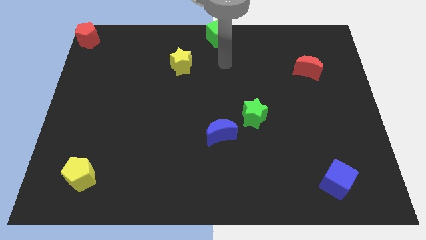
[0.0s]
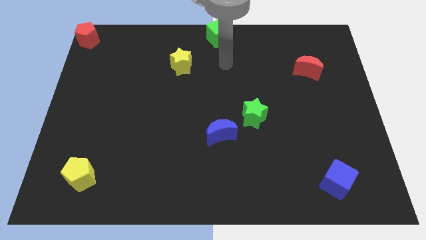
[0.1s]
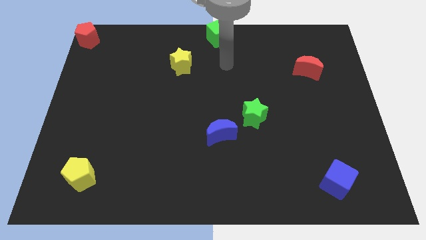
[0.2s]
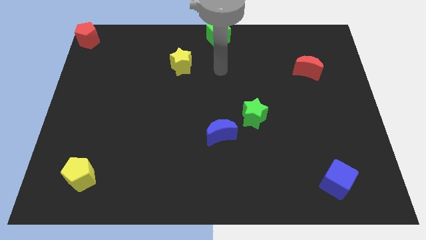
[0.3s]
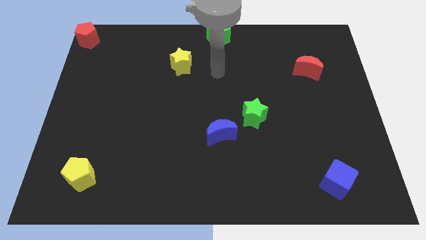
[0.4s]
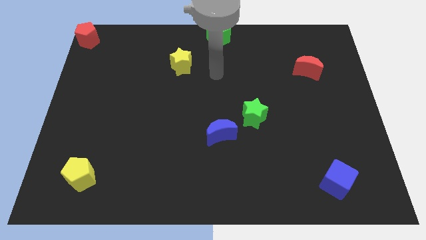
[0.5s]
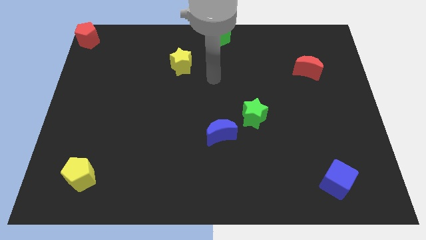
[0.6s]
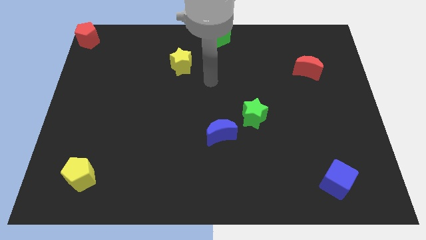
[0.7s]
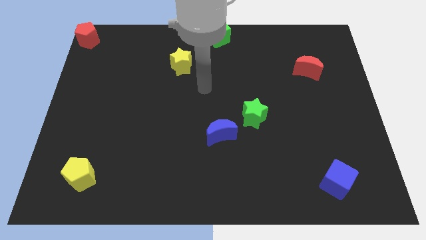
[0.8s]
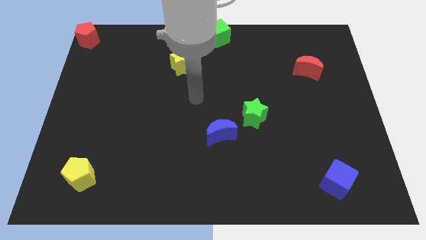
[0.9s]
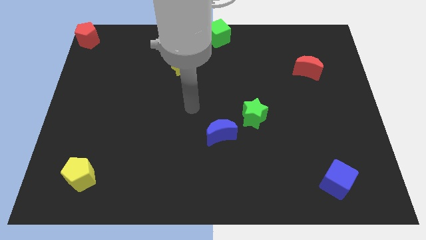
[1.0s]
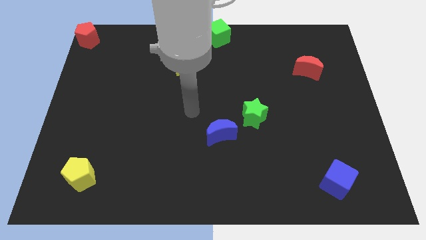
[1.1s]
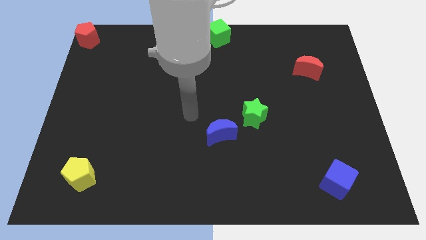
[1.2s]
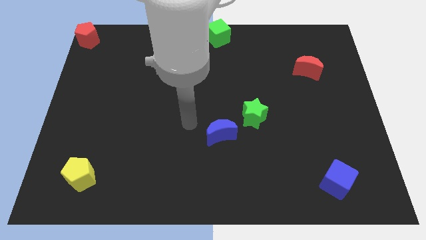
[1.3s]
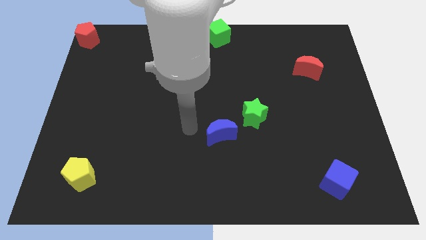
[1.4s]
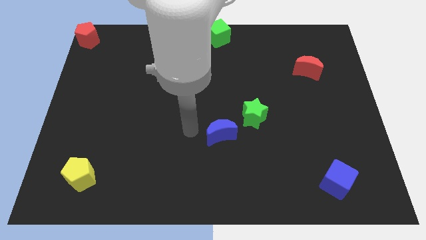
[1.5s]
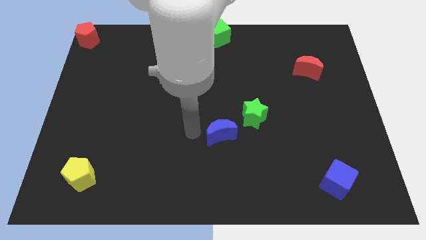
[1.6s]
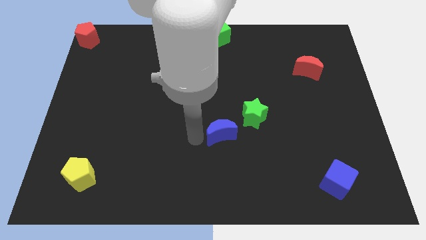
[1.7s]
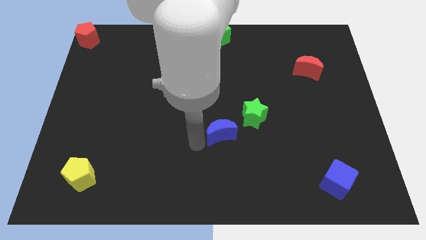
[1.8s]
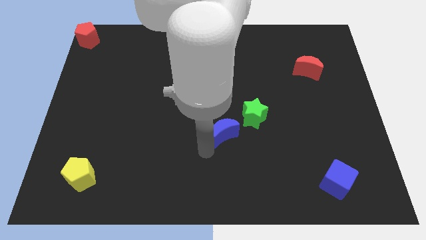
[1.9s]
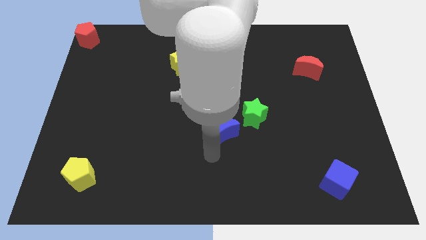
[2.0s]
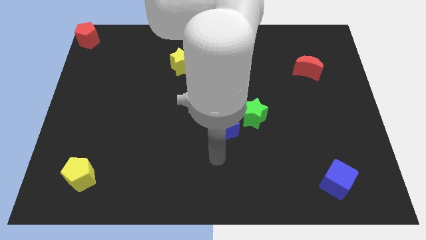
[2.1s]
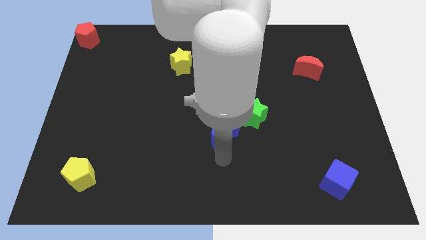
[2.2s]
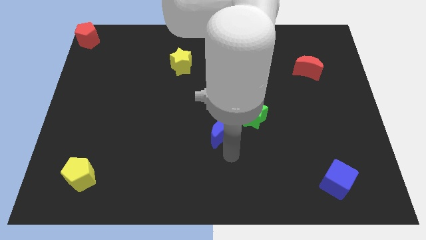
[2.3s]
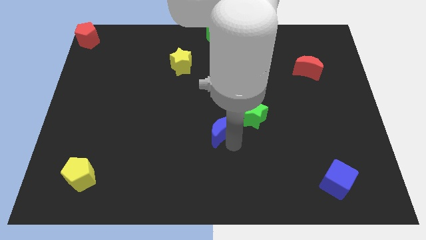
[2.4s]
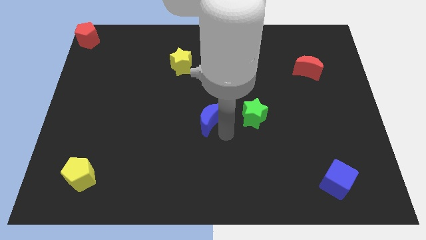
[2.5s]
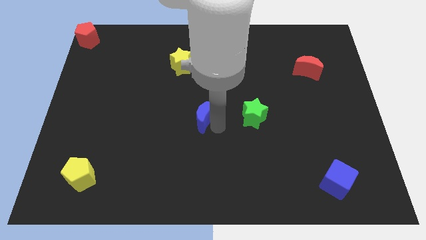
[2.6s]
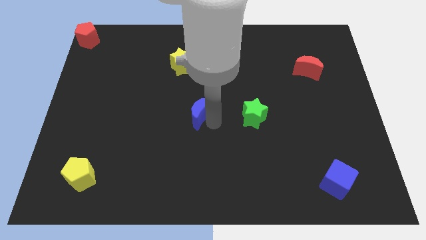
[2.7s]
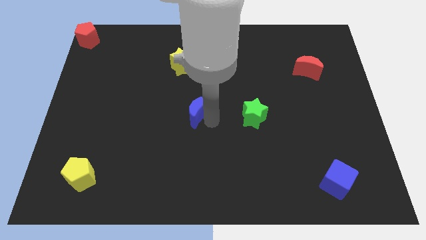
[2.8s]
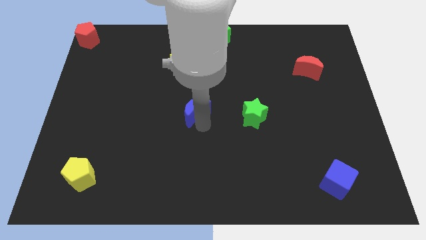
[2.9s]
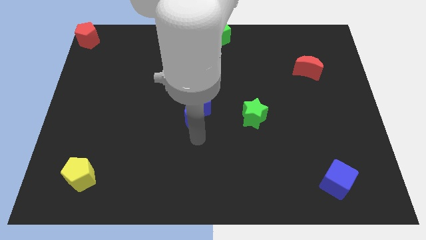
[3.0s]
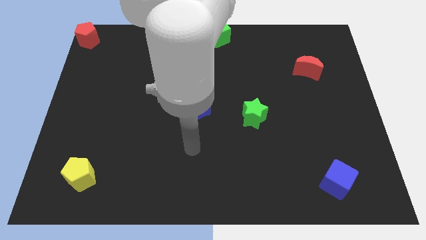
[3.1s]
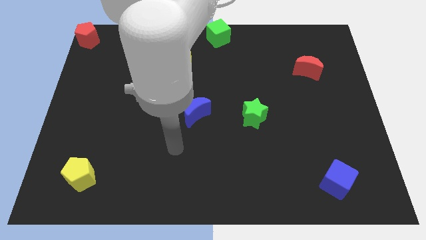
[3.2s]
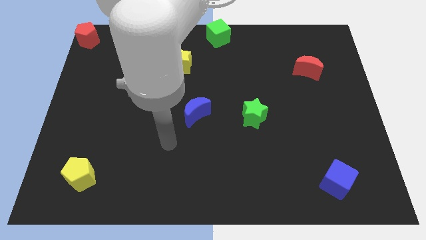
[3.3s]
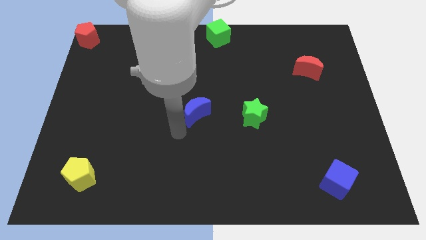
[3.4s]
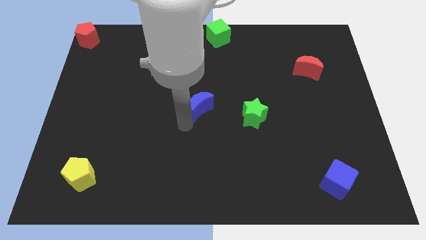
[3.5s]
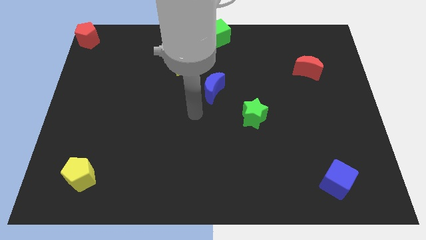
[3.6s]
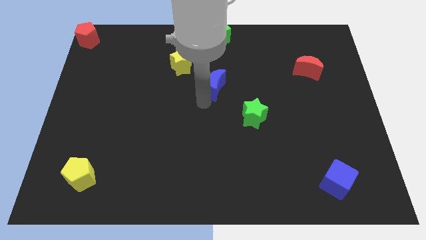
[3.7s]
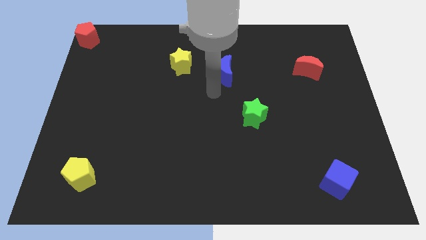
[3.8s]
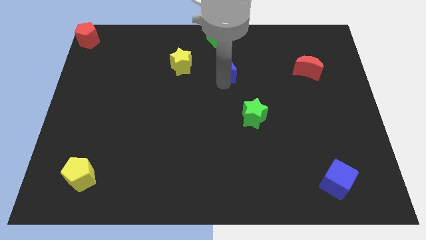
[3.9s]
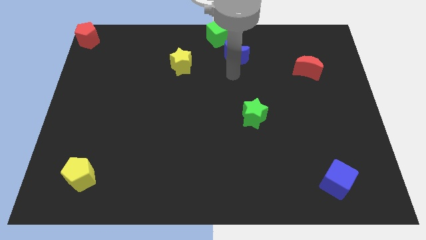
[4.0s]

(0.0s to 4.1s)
slide the bleu crescent in between the red moon and yellow star

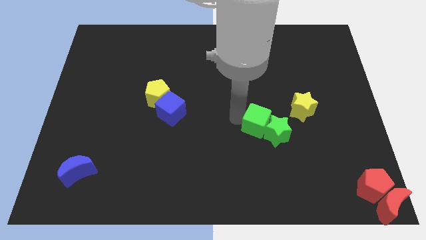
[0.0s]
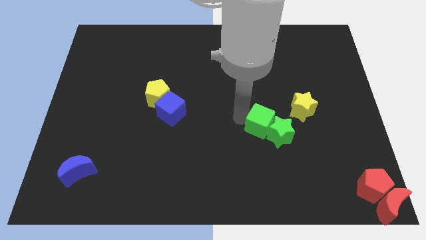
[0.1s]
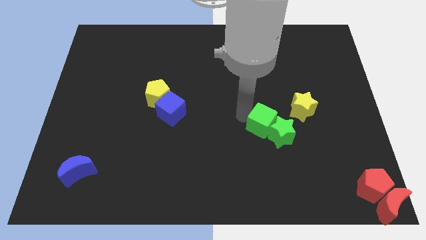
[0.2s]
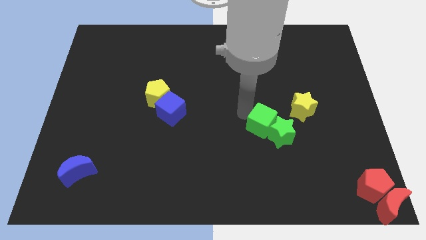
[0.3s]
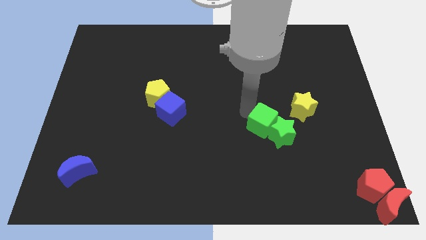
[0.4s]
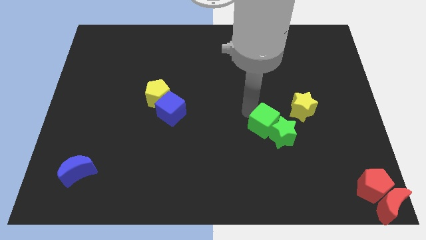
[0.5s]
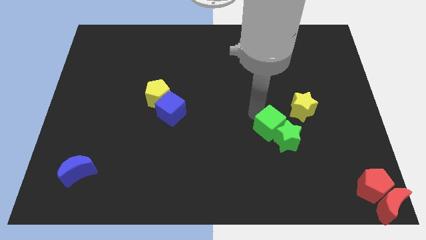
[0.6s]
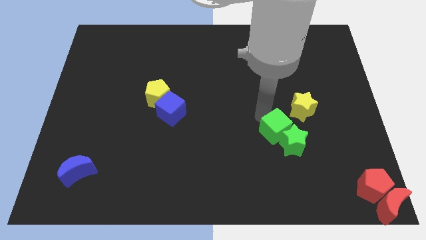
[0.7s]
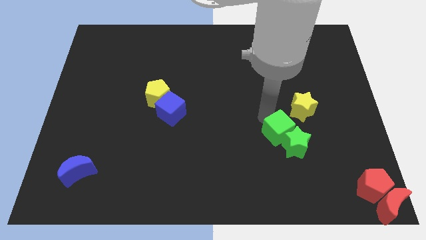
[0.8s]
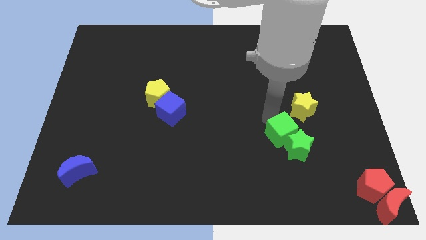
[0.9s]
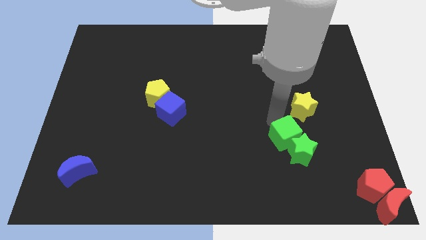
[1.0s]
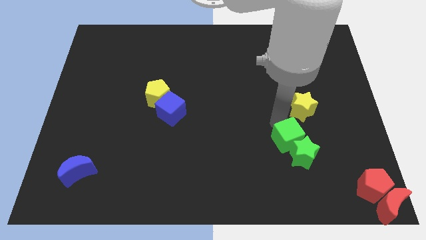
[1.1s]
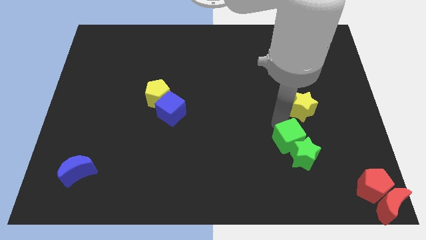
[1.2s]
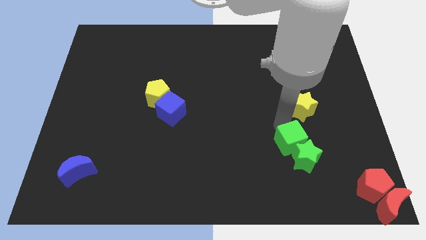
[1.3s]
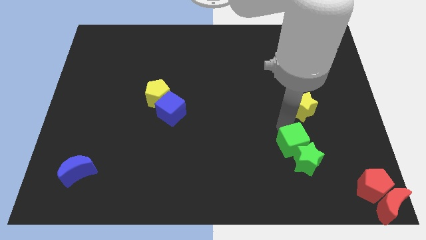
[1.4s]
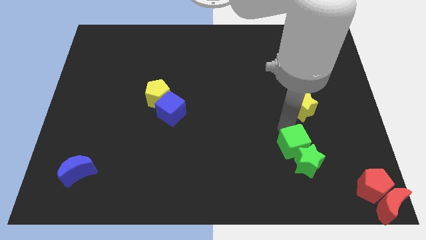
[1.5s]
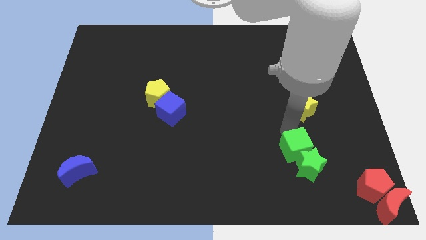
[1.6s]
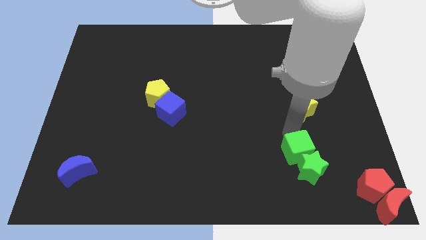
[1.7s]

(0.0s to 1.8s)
move green cube along green star towards the red pentagon

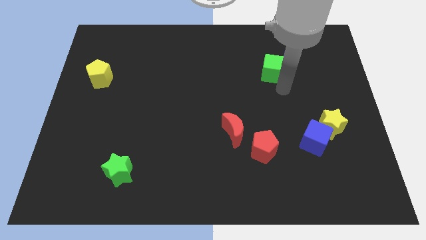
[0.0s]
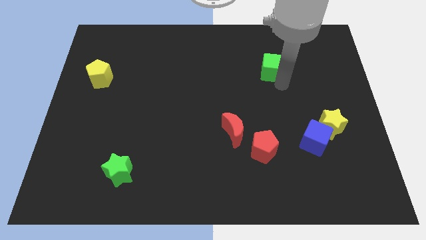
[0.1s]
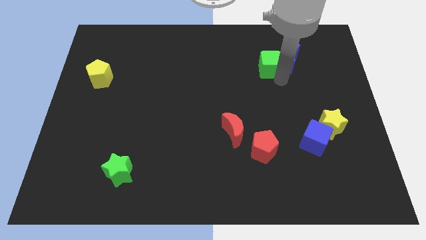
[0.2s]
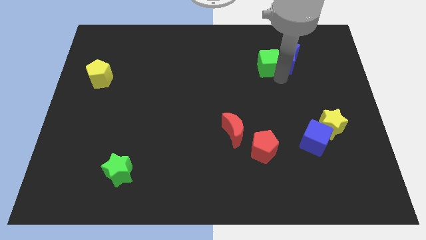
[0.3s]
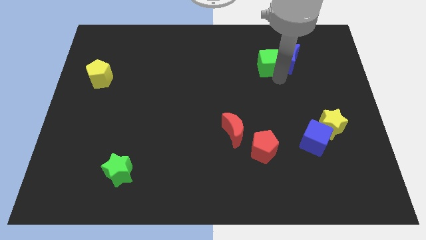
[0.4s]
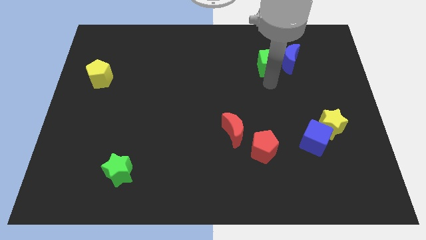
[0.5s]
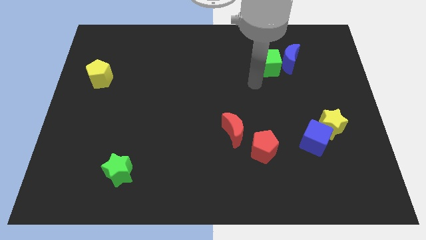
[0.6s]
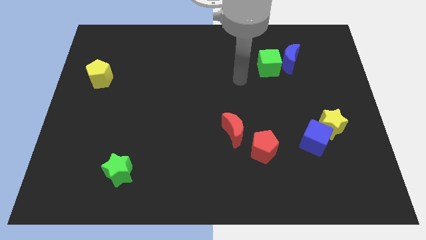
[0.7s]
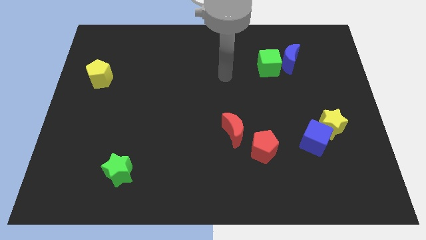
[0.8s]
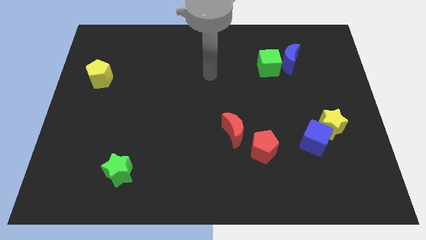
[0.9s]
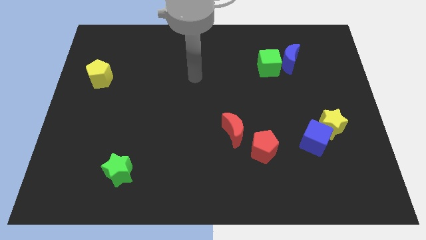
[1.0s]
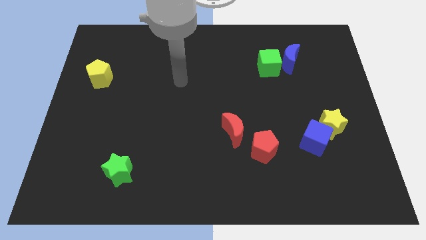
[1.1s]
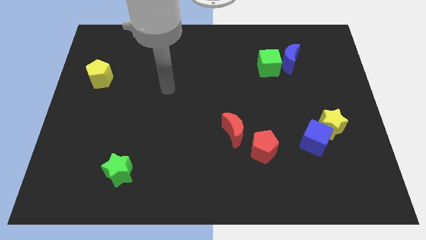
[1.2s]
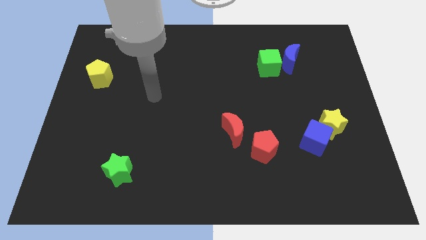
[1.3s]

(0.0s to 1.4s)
move green cube left beside the blue moon

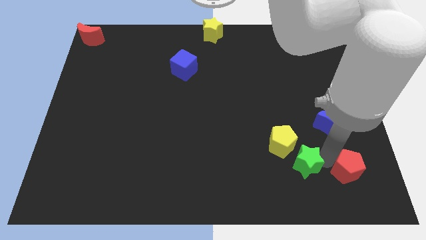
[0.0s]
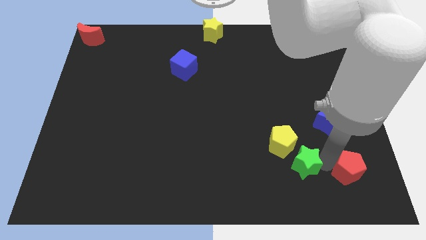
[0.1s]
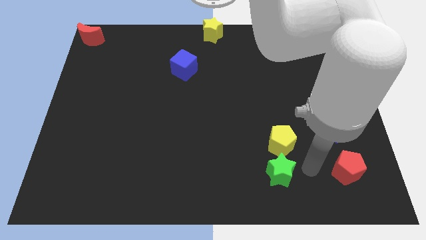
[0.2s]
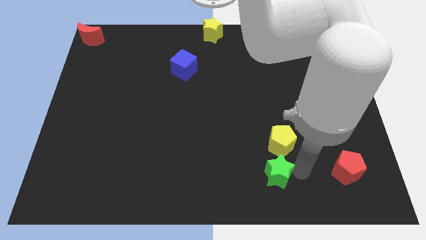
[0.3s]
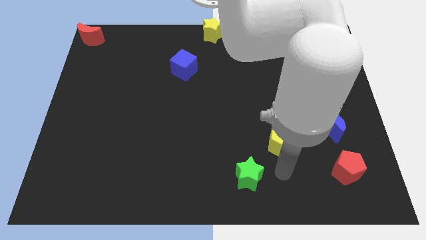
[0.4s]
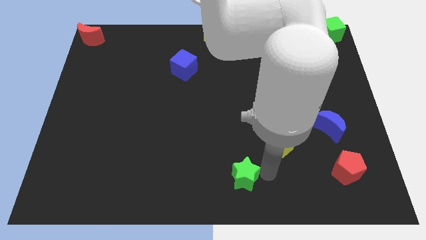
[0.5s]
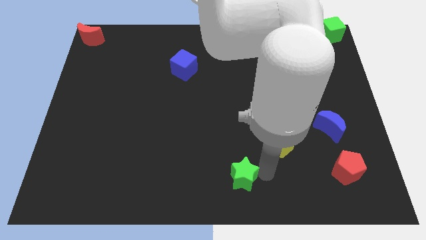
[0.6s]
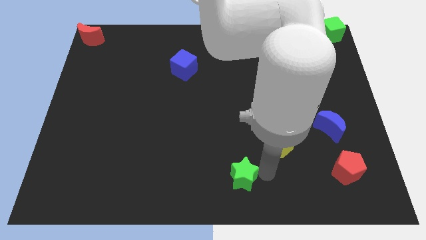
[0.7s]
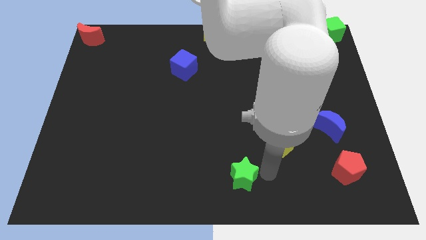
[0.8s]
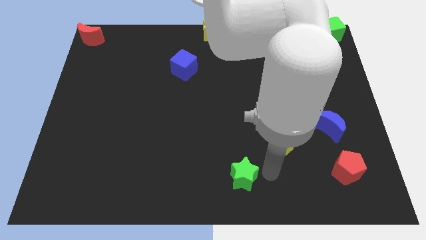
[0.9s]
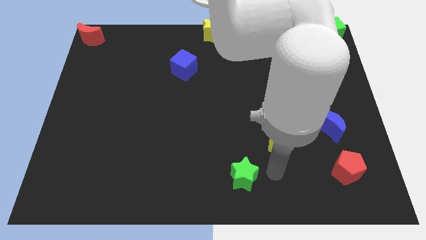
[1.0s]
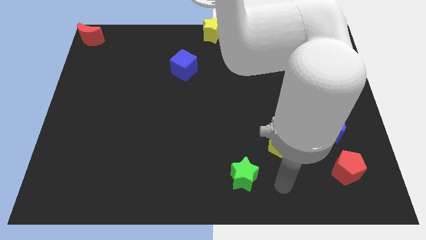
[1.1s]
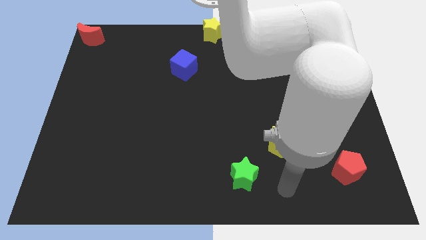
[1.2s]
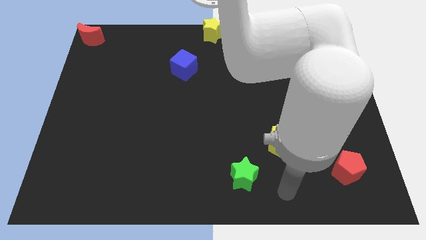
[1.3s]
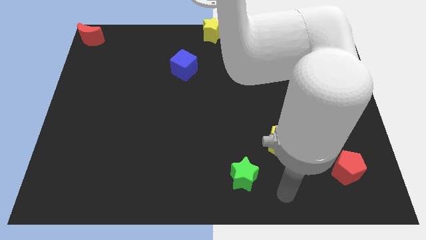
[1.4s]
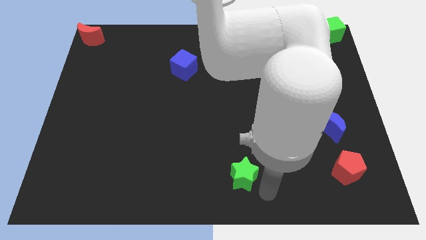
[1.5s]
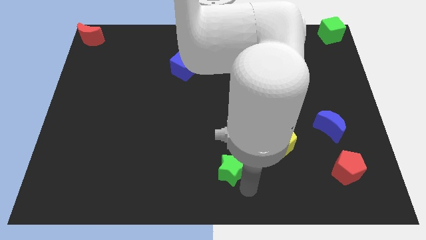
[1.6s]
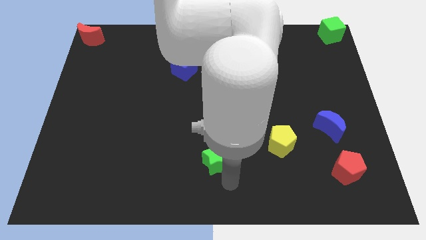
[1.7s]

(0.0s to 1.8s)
push the green star to left side of the board

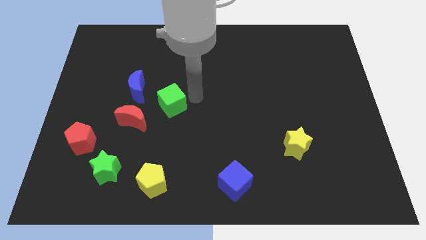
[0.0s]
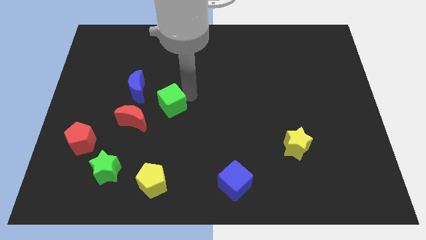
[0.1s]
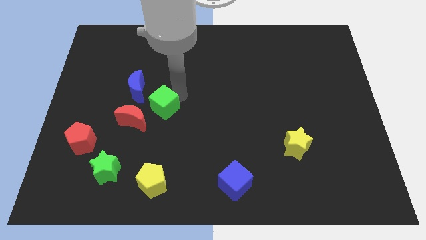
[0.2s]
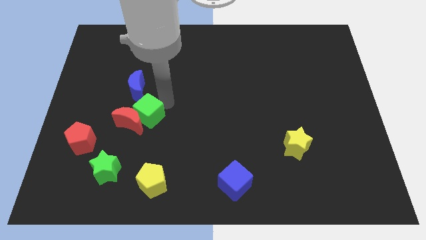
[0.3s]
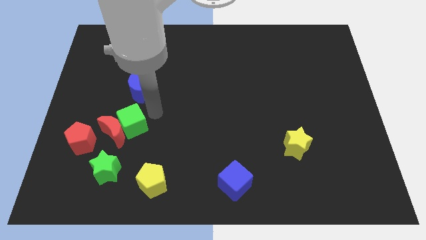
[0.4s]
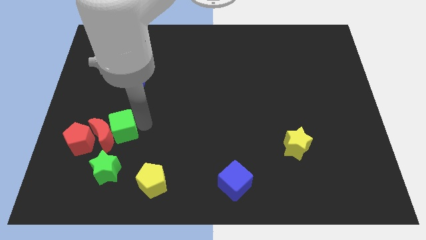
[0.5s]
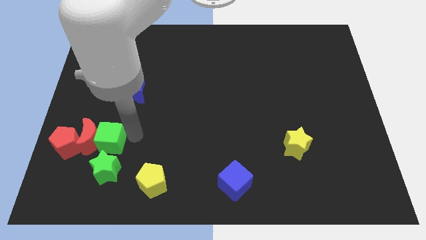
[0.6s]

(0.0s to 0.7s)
push the green cube into the red moon
